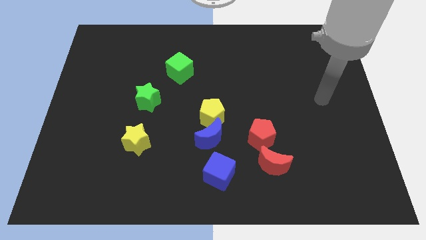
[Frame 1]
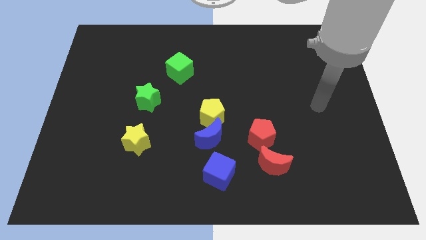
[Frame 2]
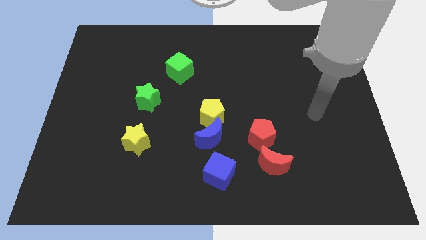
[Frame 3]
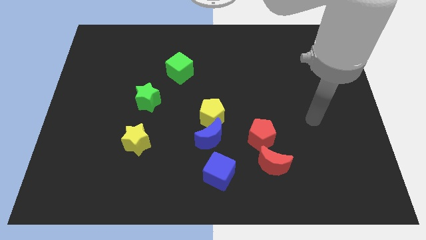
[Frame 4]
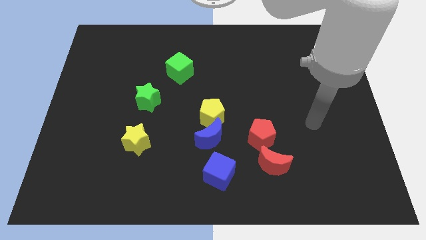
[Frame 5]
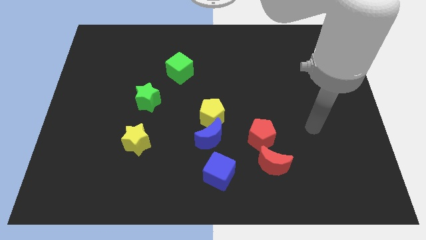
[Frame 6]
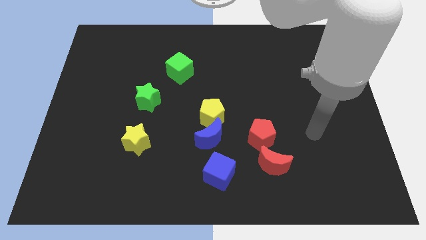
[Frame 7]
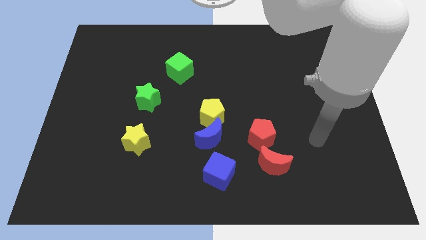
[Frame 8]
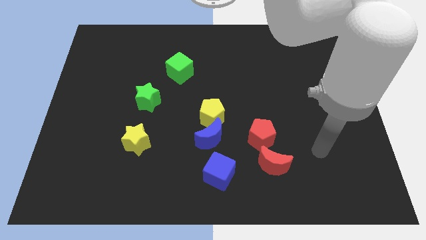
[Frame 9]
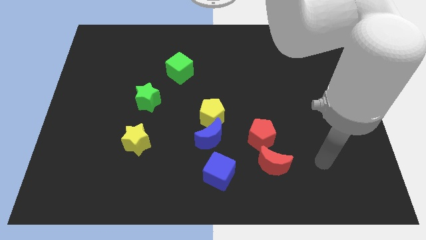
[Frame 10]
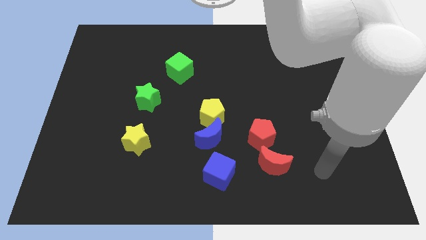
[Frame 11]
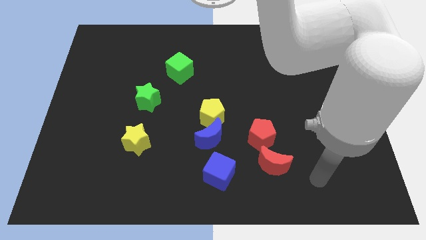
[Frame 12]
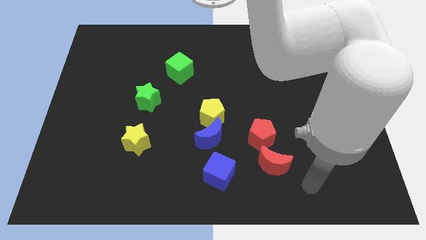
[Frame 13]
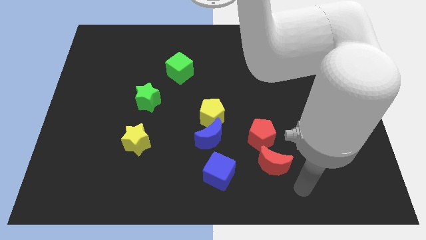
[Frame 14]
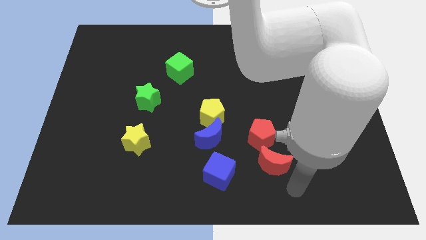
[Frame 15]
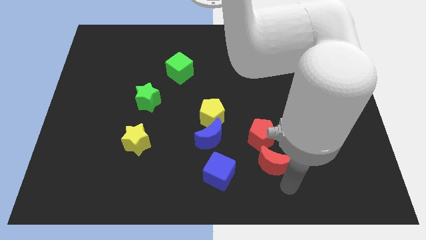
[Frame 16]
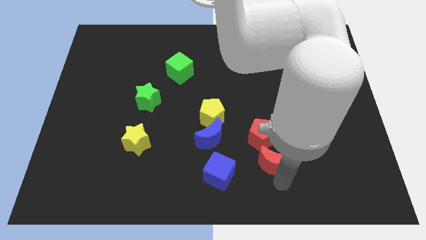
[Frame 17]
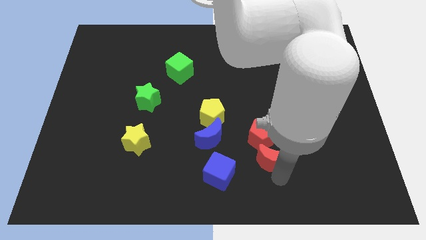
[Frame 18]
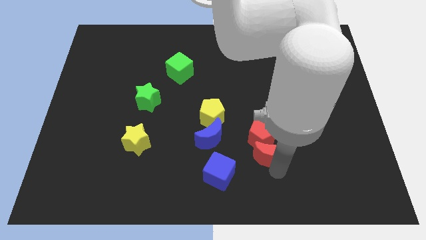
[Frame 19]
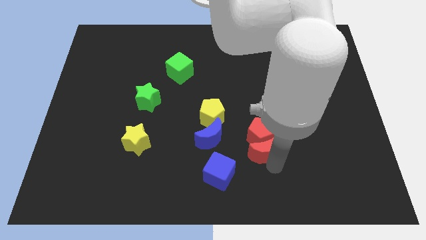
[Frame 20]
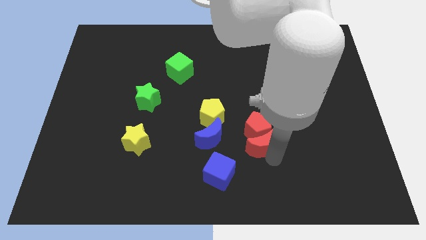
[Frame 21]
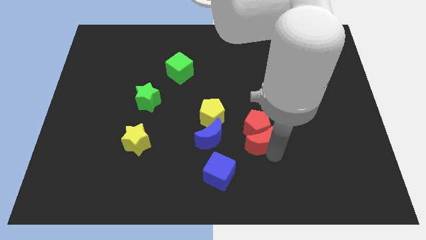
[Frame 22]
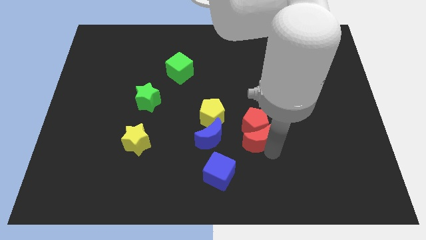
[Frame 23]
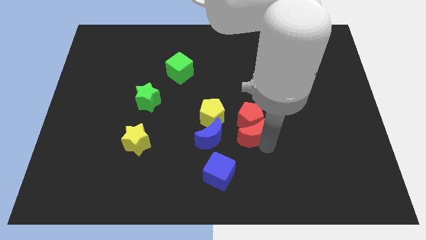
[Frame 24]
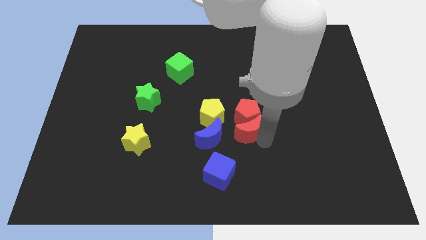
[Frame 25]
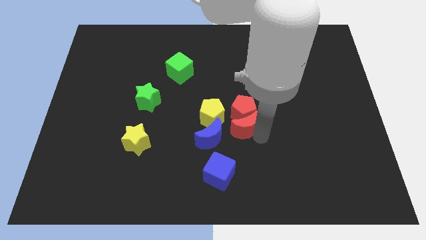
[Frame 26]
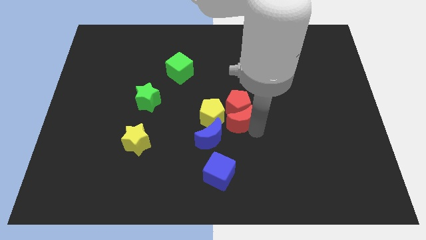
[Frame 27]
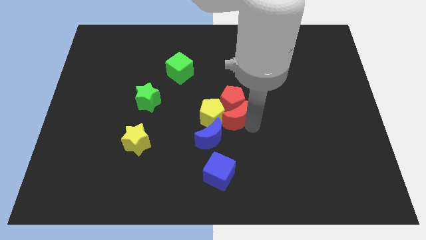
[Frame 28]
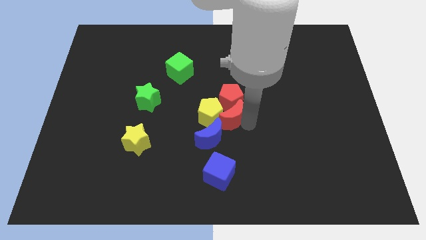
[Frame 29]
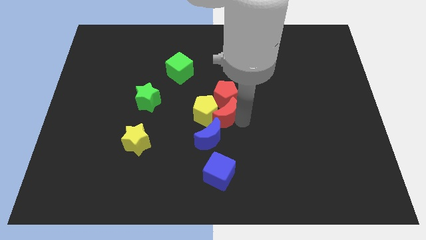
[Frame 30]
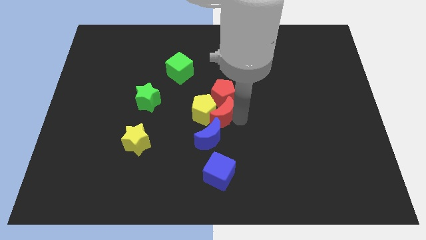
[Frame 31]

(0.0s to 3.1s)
move the red blocks into the yellow pentagon

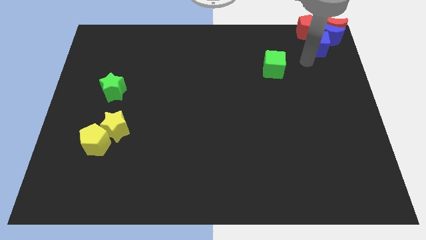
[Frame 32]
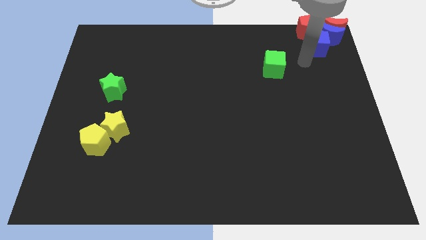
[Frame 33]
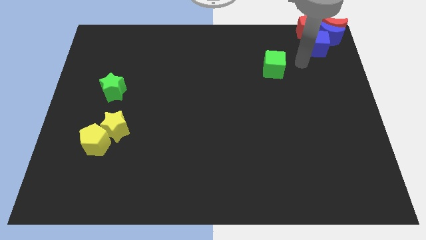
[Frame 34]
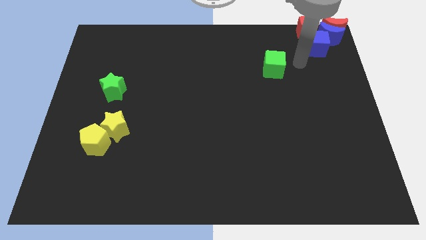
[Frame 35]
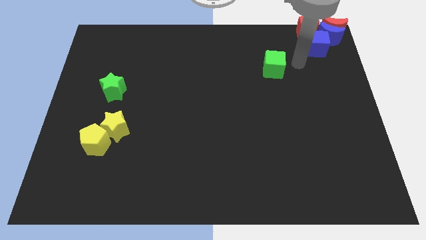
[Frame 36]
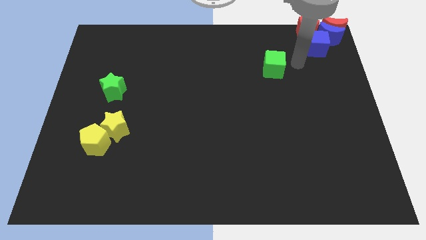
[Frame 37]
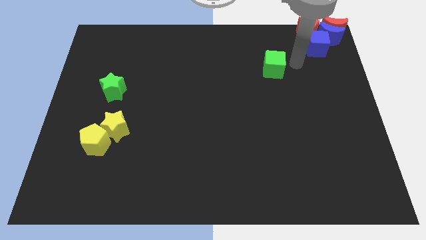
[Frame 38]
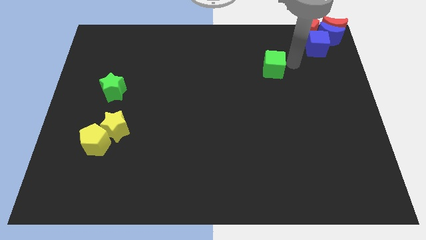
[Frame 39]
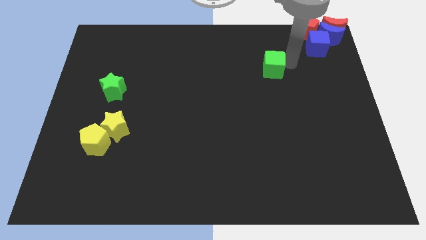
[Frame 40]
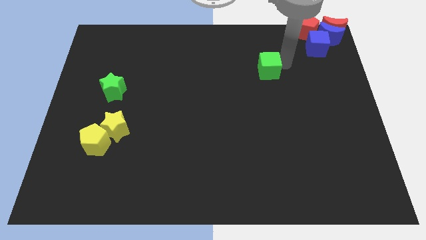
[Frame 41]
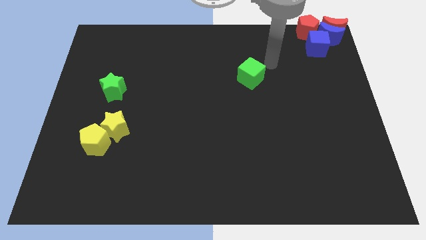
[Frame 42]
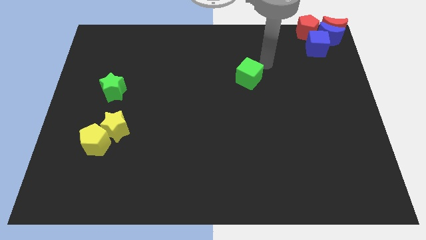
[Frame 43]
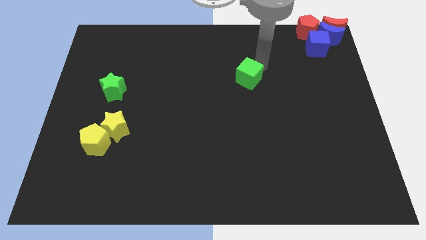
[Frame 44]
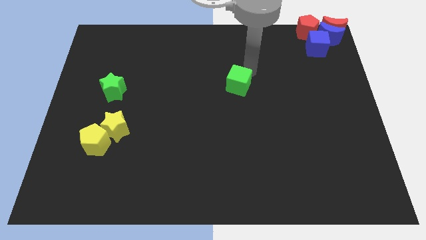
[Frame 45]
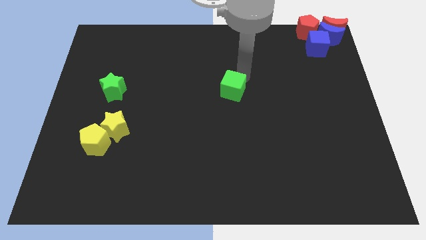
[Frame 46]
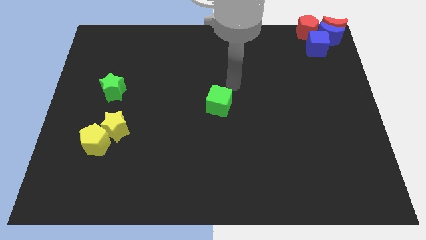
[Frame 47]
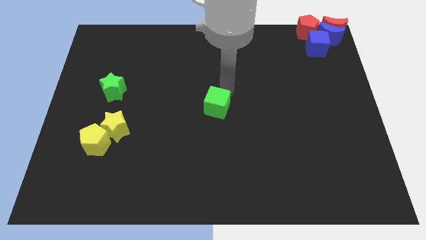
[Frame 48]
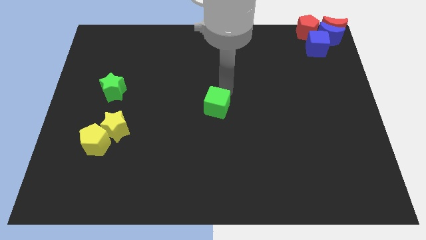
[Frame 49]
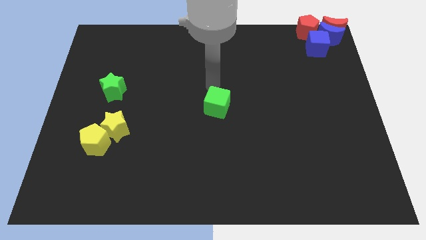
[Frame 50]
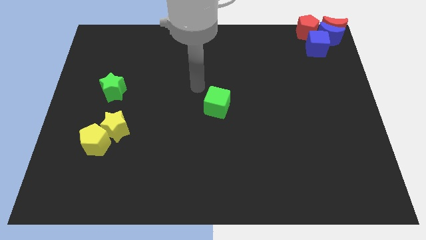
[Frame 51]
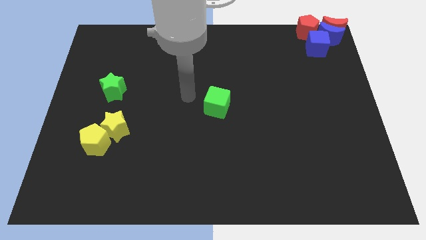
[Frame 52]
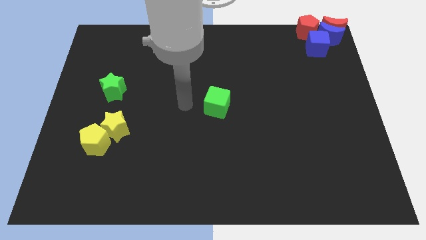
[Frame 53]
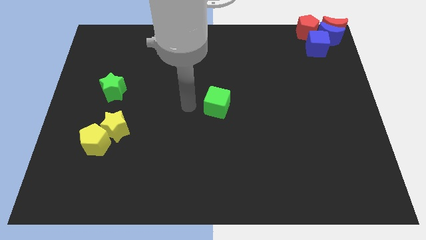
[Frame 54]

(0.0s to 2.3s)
move the green cube to the center of the board

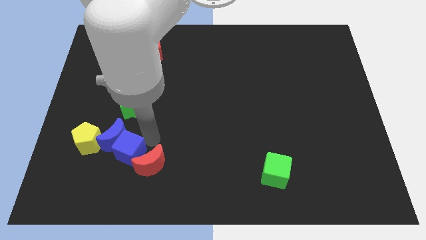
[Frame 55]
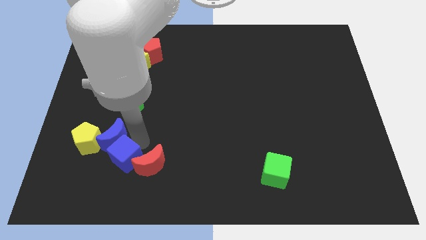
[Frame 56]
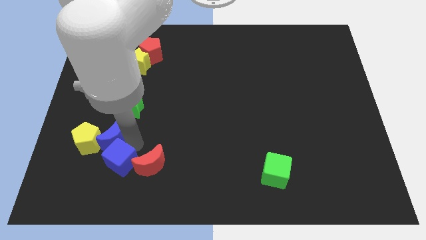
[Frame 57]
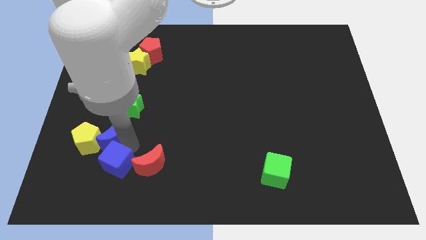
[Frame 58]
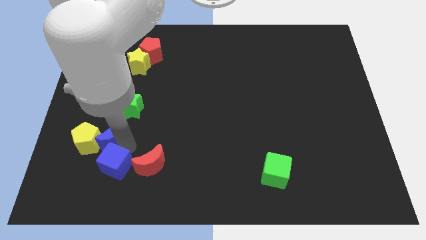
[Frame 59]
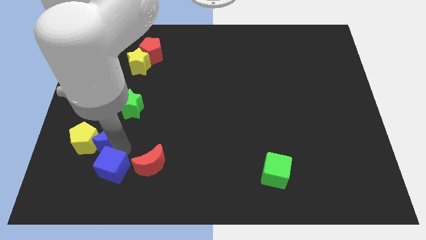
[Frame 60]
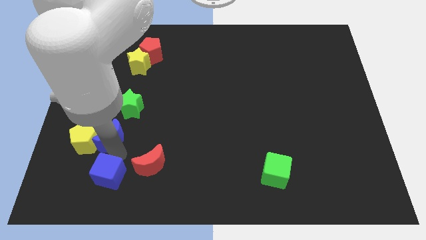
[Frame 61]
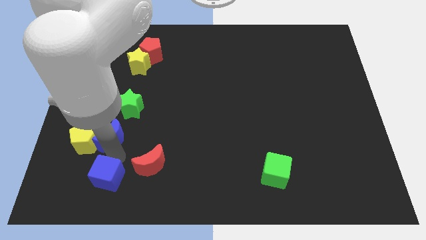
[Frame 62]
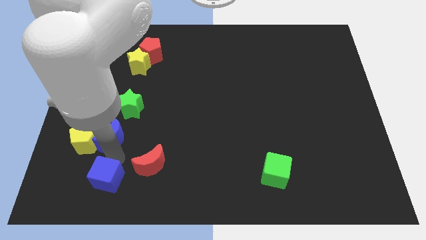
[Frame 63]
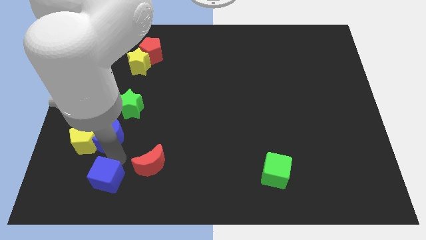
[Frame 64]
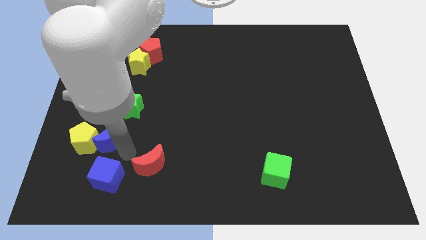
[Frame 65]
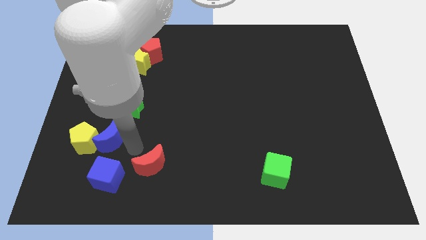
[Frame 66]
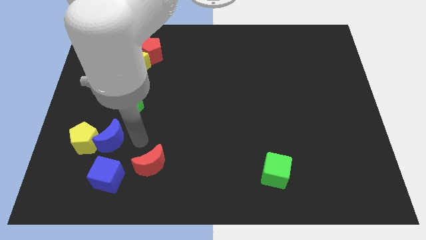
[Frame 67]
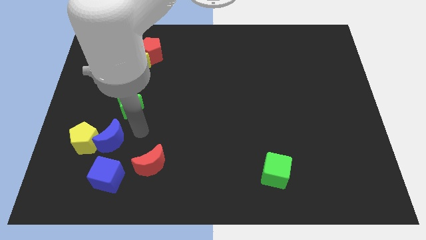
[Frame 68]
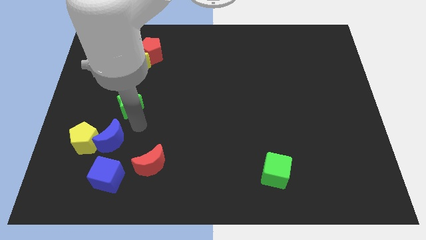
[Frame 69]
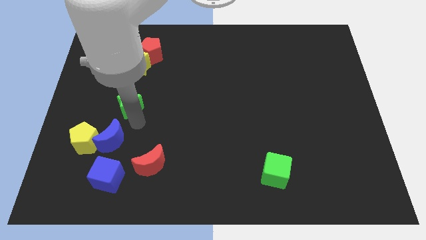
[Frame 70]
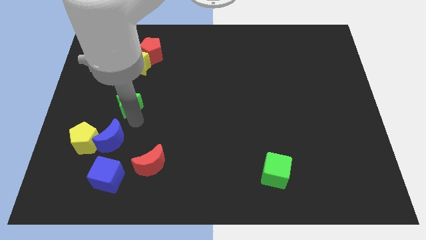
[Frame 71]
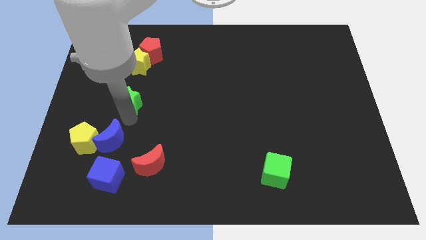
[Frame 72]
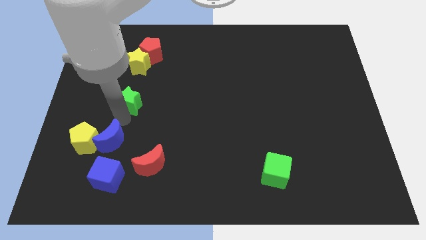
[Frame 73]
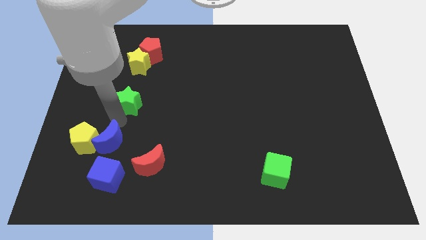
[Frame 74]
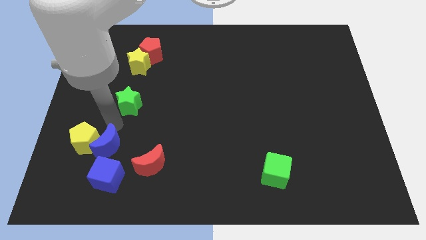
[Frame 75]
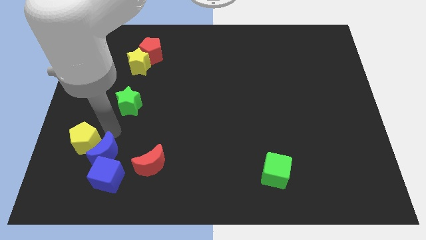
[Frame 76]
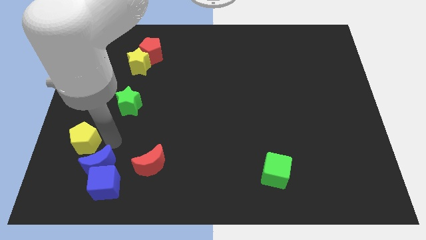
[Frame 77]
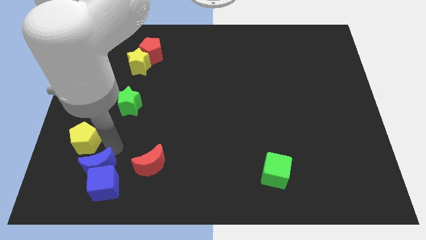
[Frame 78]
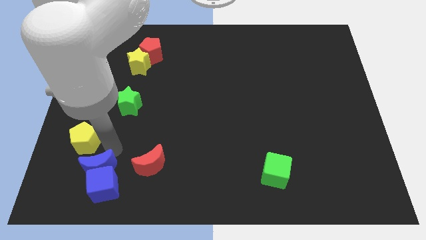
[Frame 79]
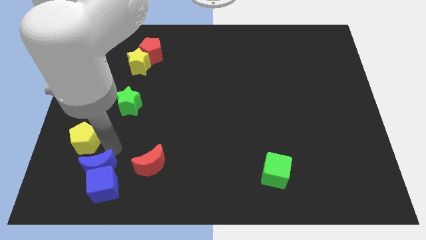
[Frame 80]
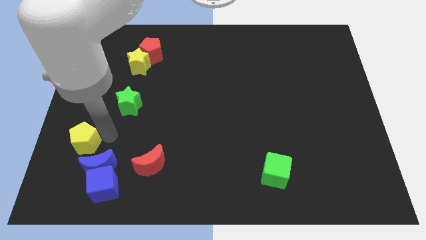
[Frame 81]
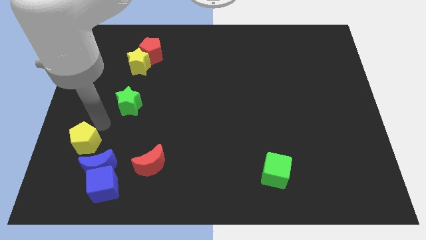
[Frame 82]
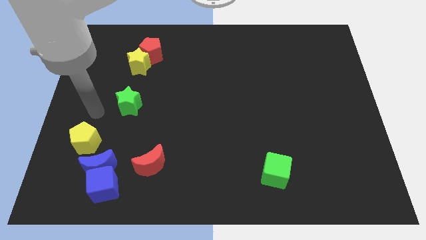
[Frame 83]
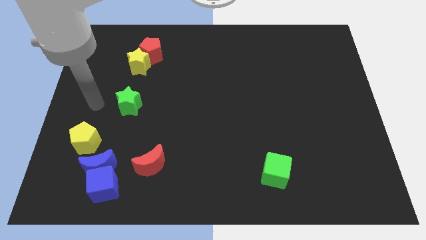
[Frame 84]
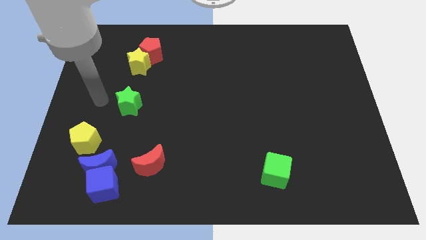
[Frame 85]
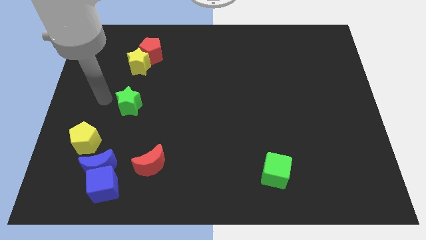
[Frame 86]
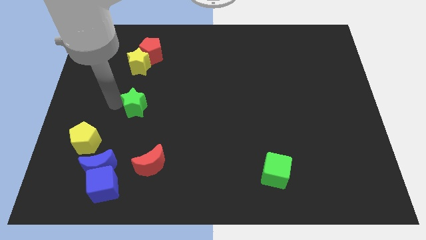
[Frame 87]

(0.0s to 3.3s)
push the blue crescent into the blue cube
